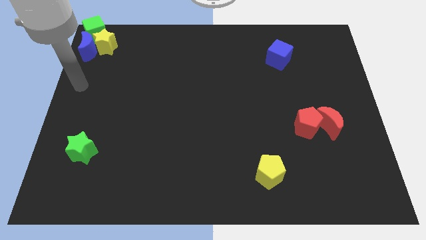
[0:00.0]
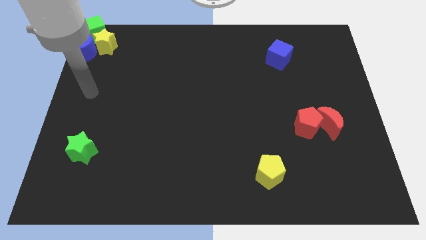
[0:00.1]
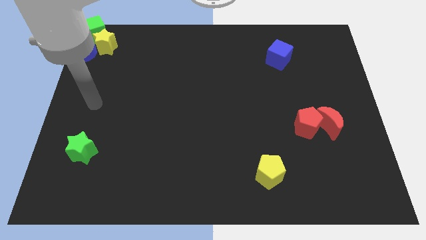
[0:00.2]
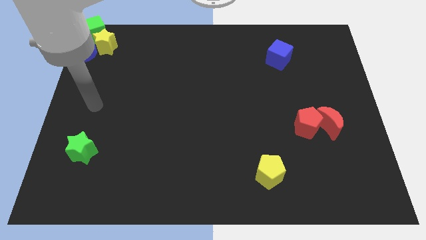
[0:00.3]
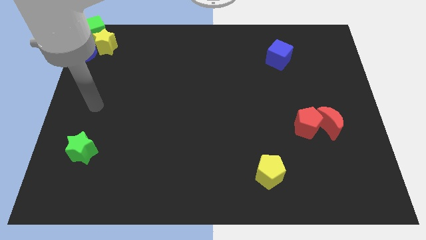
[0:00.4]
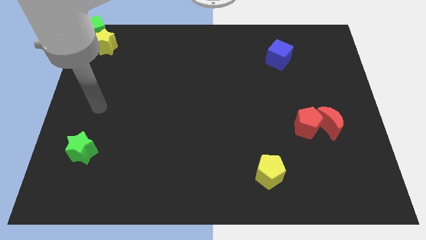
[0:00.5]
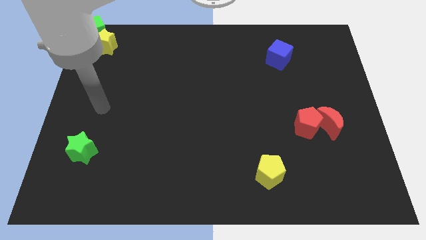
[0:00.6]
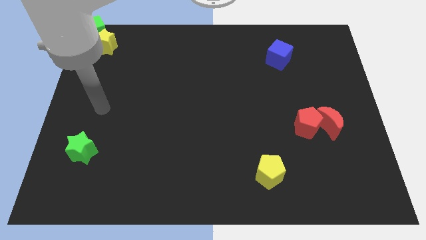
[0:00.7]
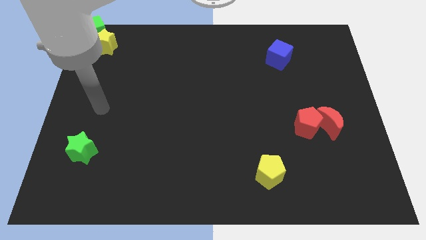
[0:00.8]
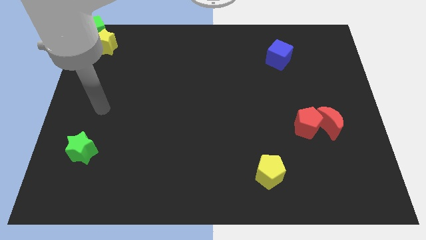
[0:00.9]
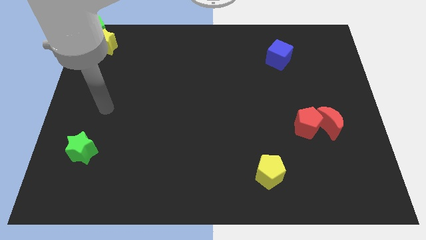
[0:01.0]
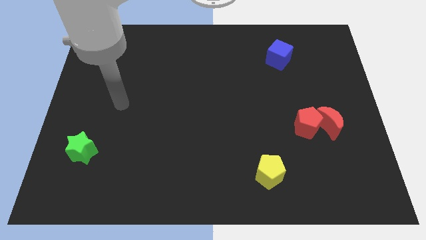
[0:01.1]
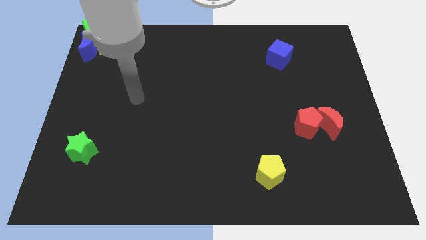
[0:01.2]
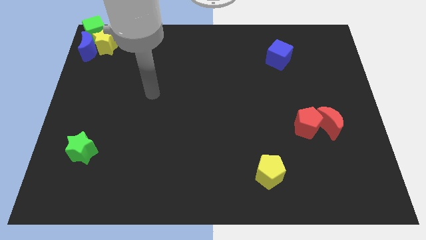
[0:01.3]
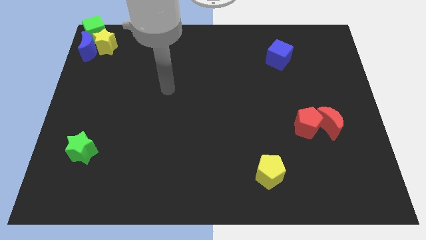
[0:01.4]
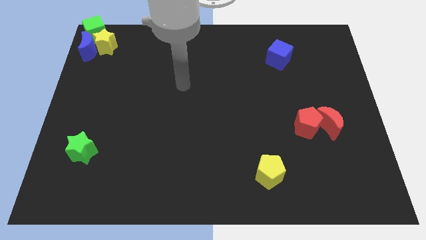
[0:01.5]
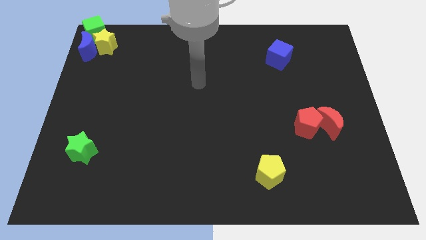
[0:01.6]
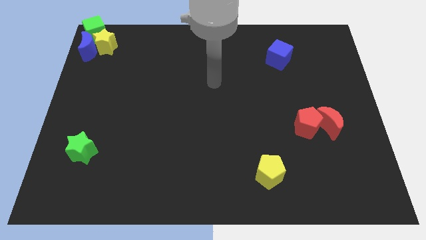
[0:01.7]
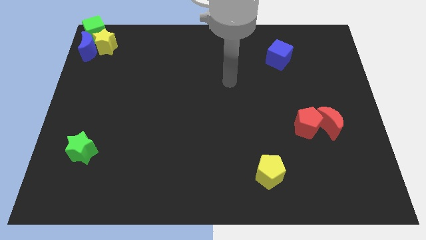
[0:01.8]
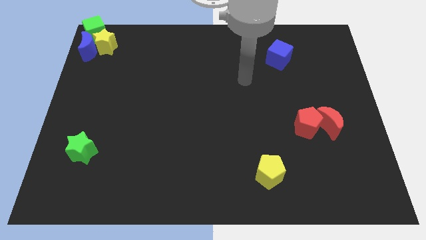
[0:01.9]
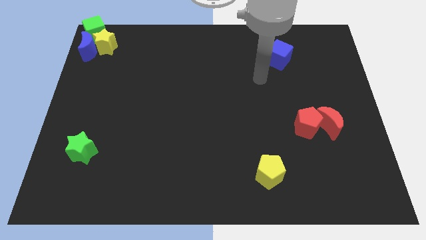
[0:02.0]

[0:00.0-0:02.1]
move the arm towards the blue cube

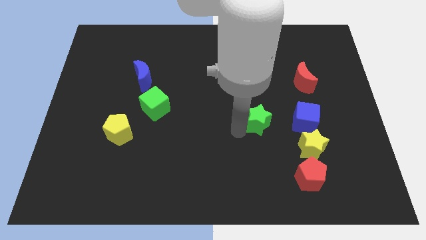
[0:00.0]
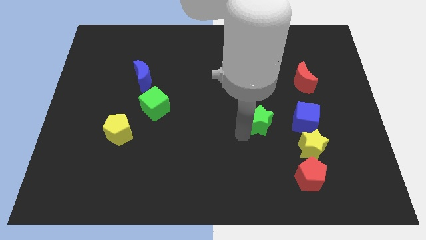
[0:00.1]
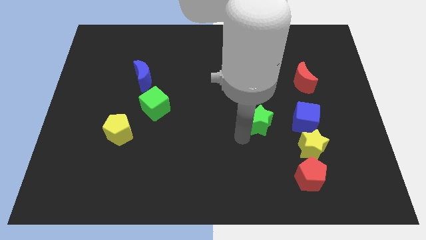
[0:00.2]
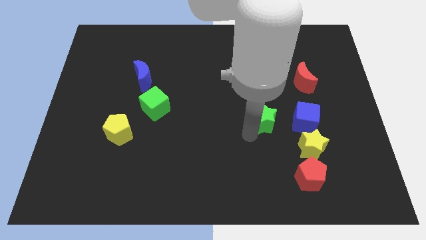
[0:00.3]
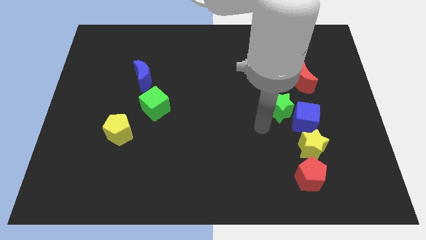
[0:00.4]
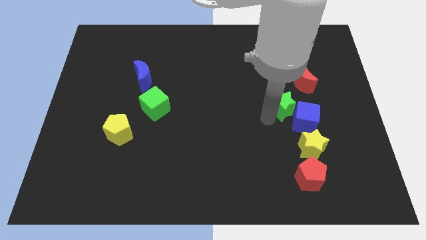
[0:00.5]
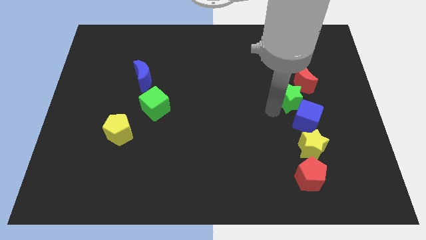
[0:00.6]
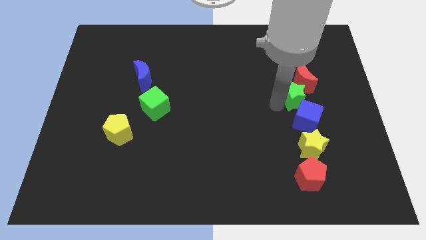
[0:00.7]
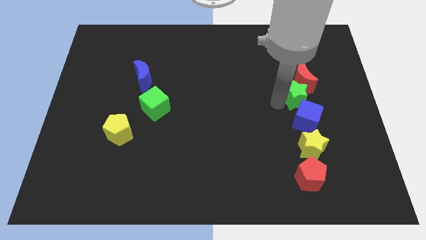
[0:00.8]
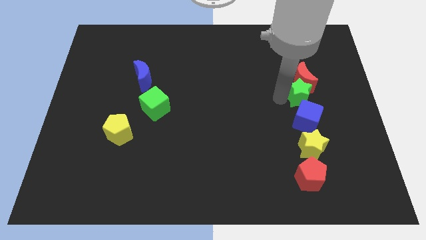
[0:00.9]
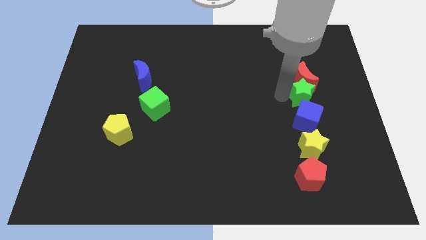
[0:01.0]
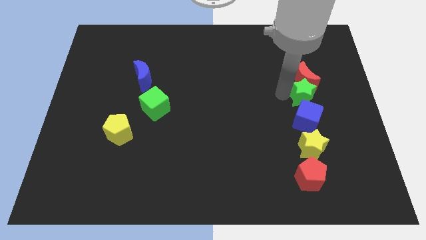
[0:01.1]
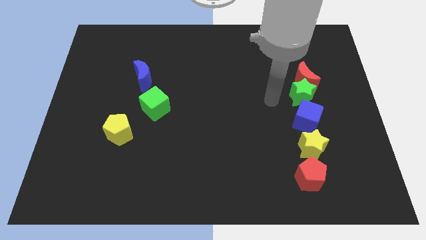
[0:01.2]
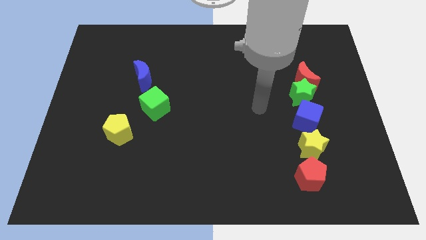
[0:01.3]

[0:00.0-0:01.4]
place the green star in between the blue cube and red moon

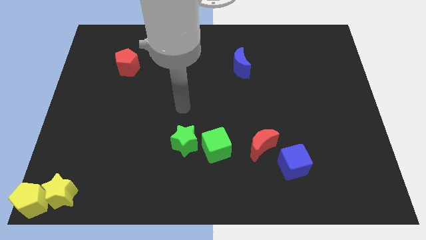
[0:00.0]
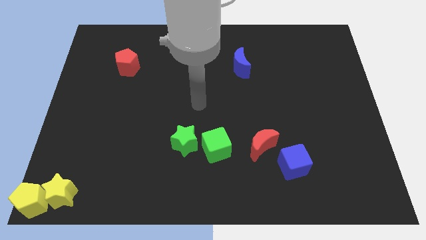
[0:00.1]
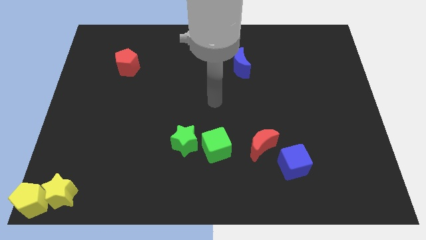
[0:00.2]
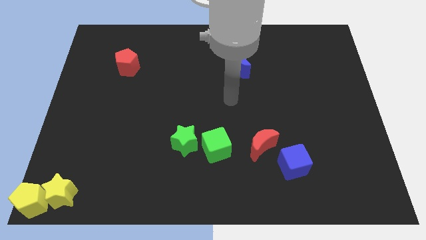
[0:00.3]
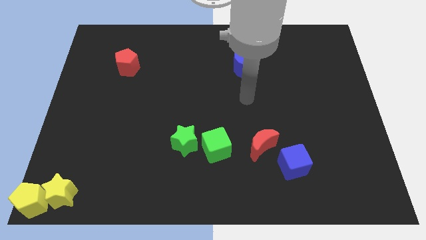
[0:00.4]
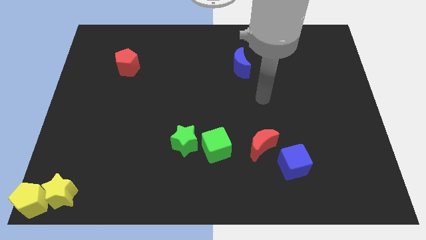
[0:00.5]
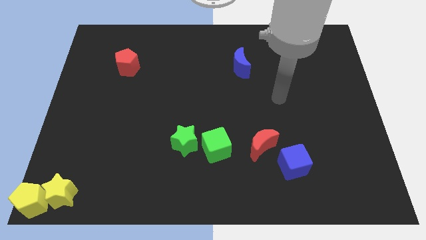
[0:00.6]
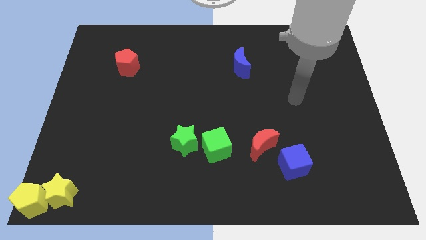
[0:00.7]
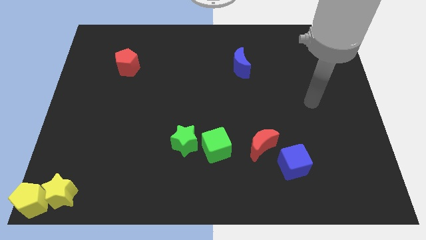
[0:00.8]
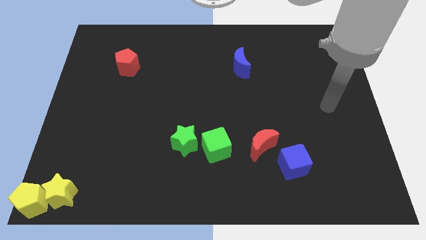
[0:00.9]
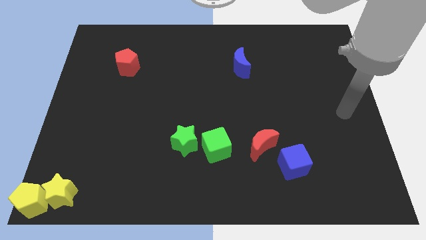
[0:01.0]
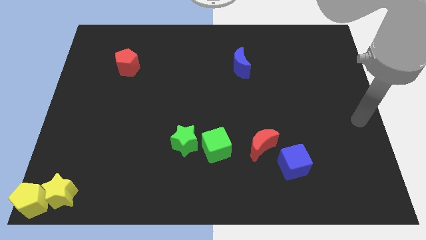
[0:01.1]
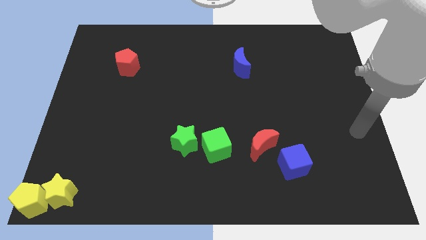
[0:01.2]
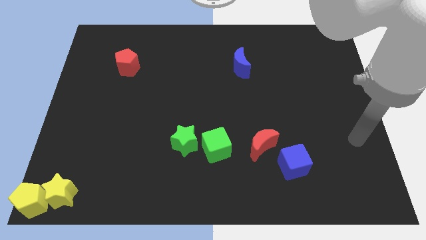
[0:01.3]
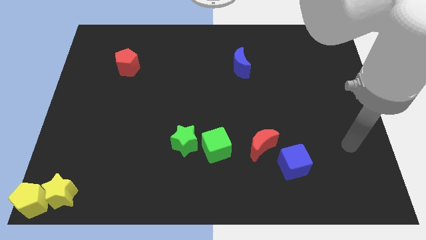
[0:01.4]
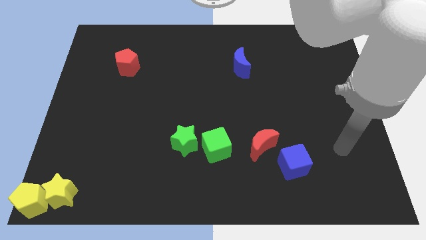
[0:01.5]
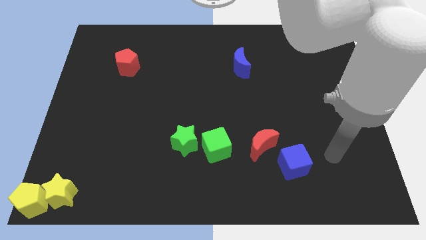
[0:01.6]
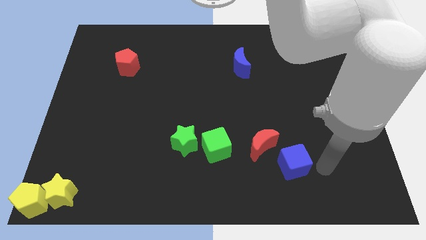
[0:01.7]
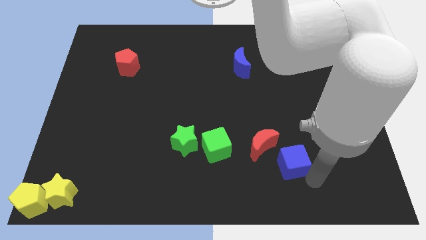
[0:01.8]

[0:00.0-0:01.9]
move your arm to the right of the blue cube

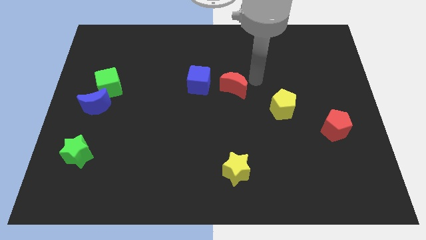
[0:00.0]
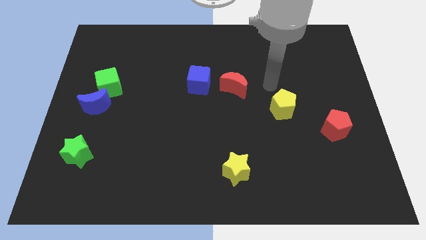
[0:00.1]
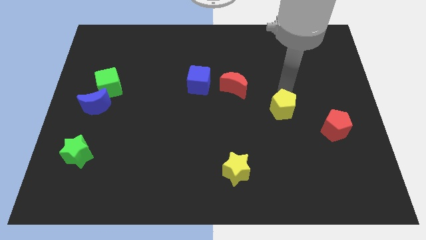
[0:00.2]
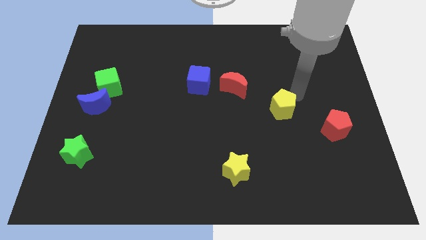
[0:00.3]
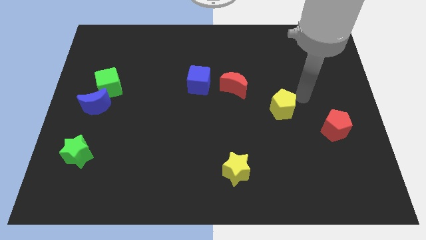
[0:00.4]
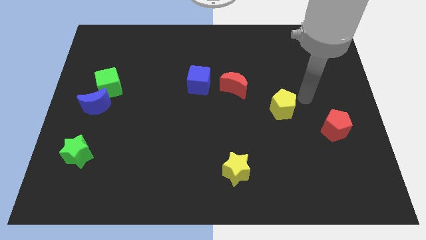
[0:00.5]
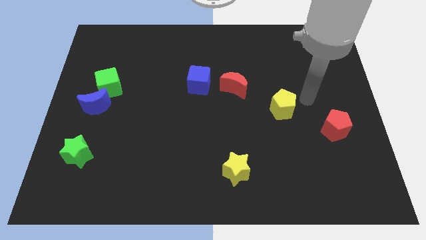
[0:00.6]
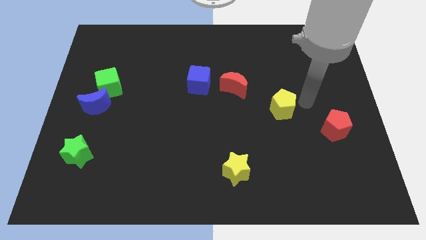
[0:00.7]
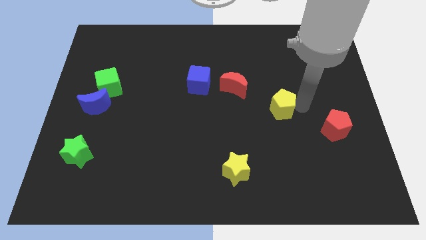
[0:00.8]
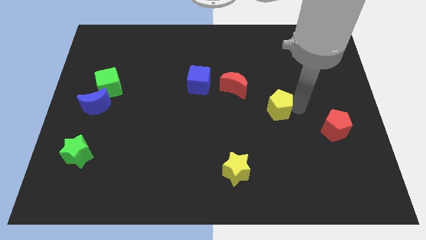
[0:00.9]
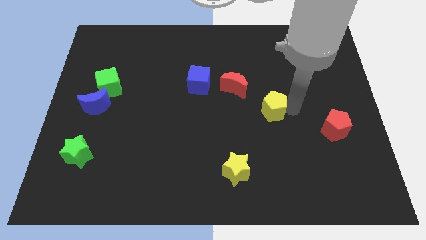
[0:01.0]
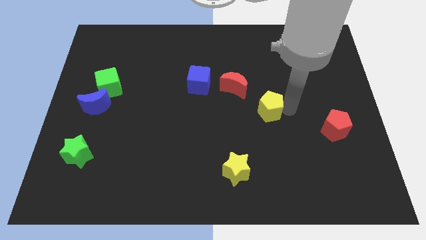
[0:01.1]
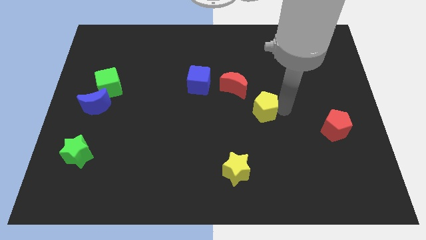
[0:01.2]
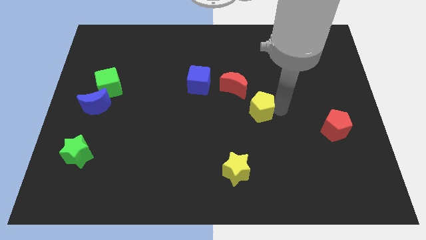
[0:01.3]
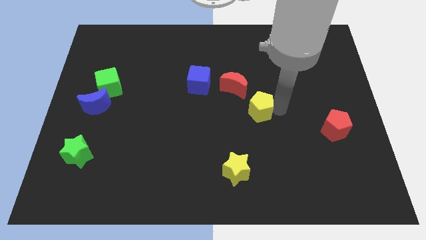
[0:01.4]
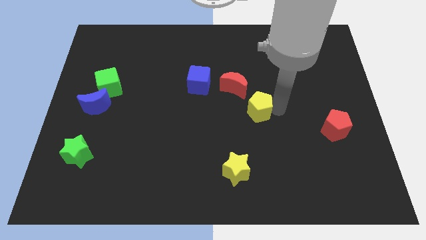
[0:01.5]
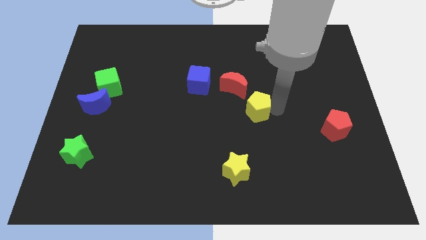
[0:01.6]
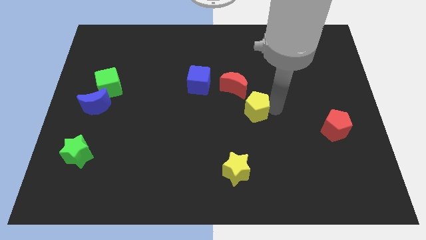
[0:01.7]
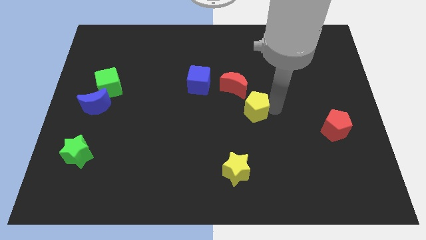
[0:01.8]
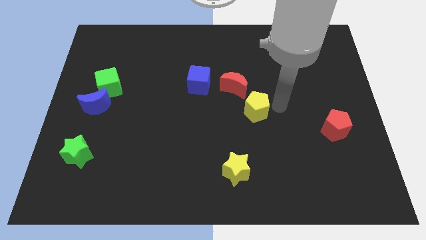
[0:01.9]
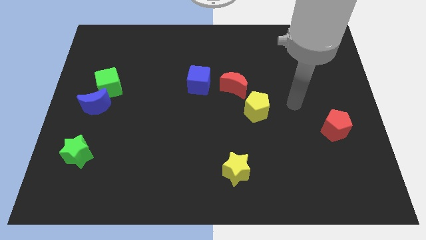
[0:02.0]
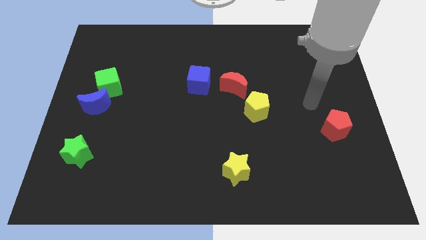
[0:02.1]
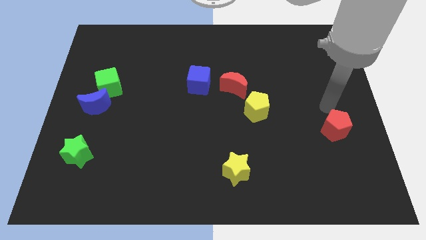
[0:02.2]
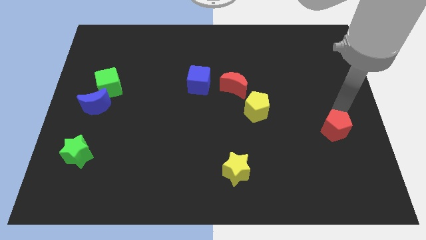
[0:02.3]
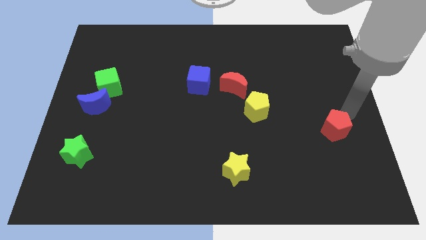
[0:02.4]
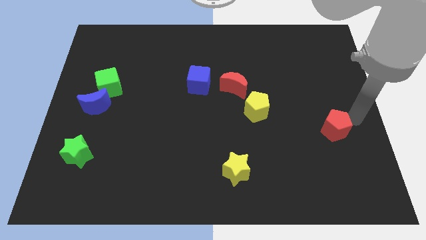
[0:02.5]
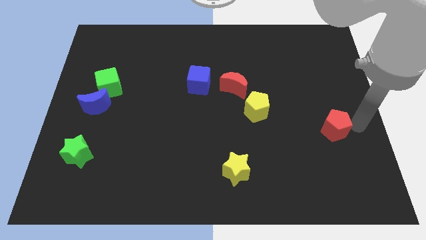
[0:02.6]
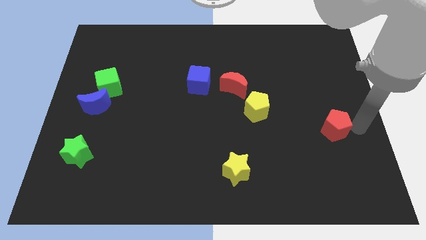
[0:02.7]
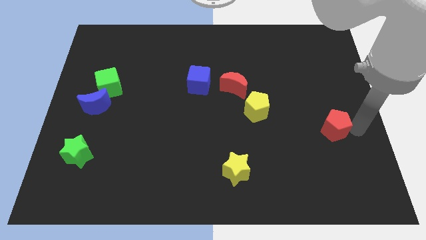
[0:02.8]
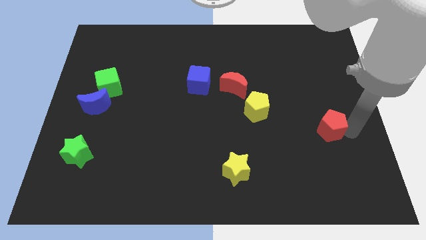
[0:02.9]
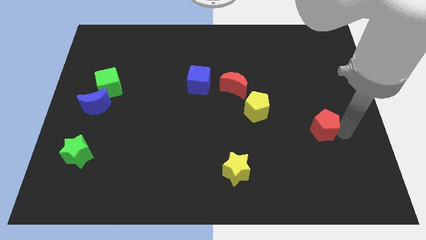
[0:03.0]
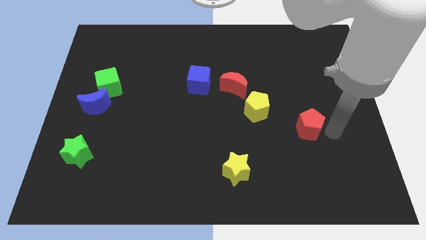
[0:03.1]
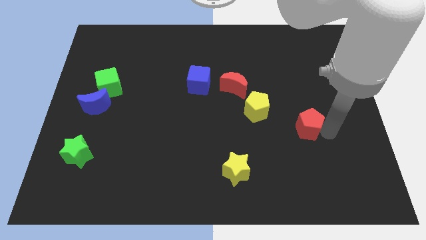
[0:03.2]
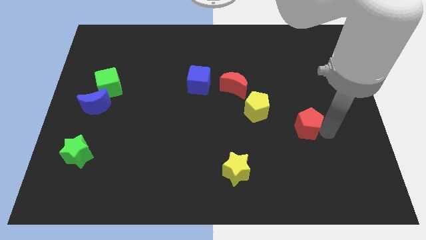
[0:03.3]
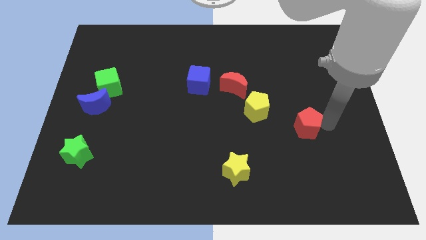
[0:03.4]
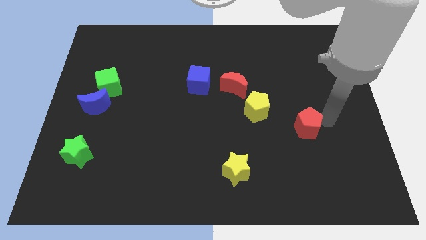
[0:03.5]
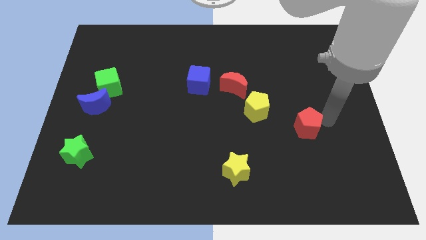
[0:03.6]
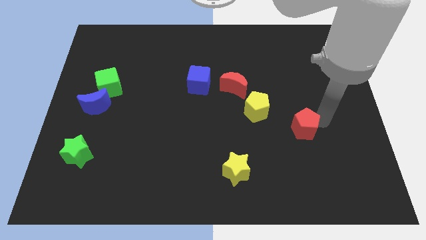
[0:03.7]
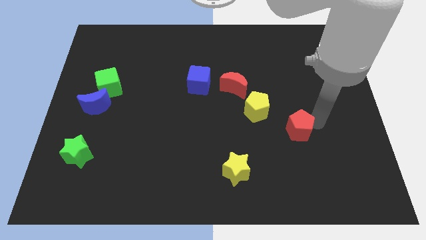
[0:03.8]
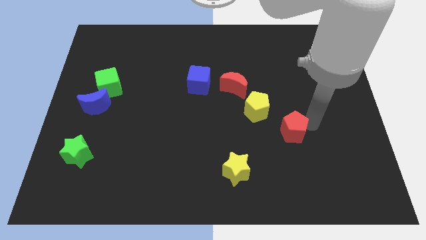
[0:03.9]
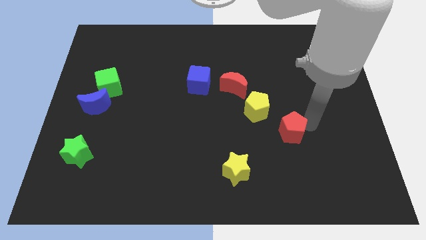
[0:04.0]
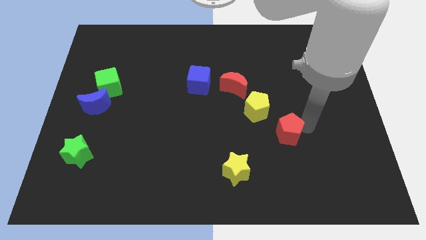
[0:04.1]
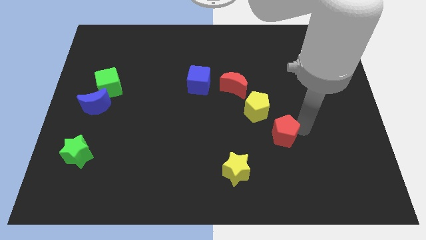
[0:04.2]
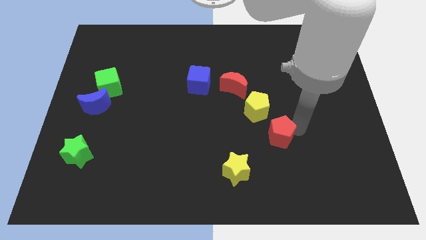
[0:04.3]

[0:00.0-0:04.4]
move the red pentagon to the left
